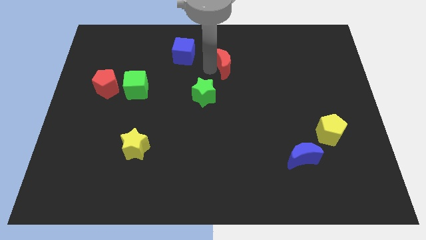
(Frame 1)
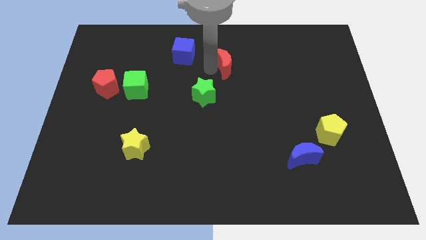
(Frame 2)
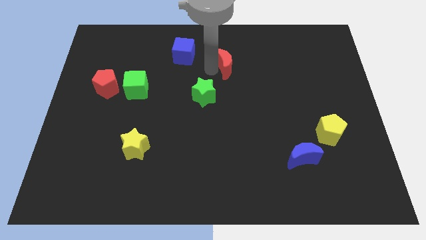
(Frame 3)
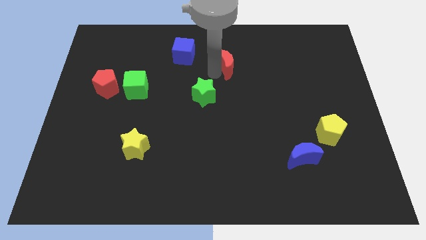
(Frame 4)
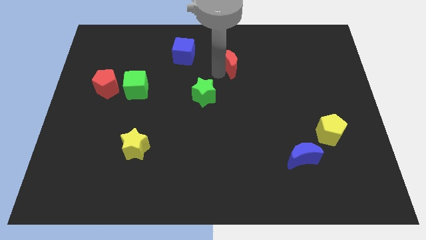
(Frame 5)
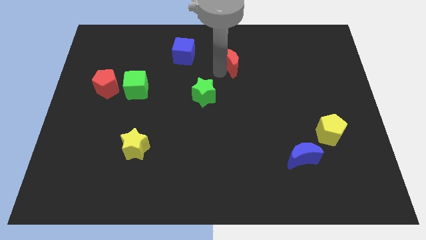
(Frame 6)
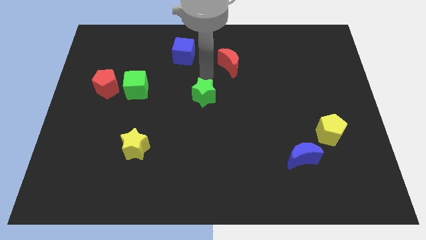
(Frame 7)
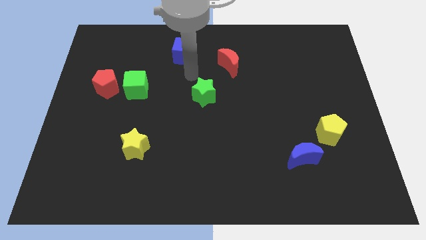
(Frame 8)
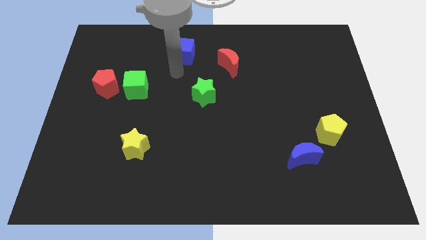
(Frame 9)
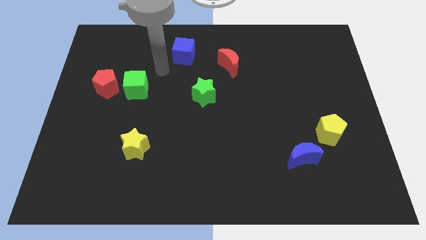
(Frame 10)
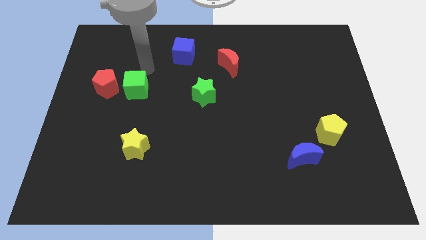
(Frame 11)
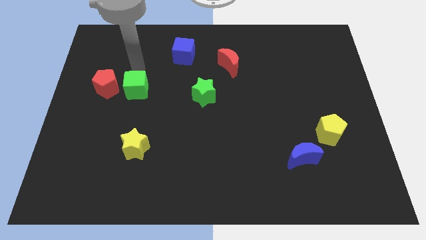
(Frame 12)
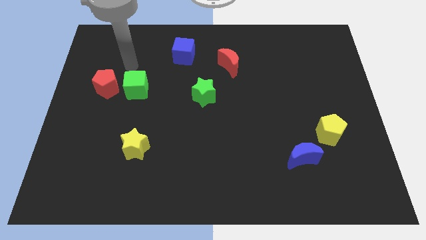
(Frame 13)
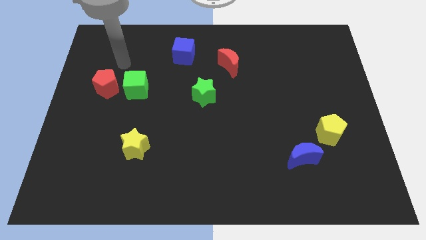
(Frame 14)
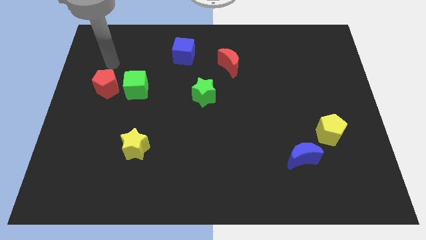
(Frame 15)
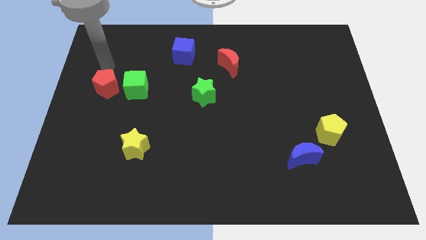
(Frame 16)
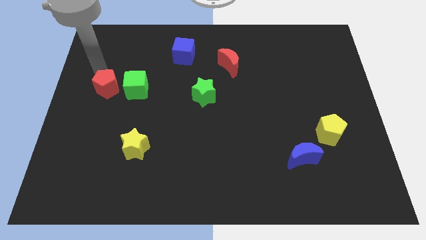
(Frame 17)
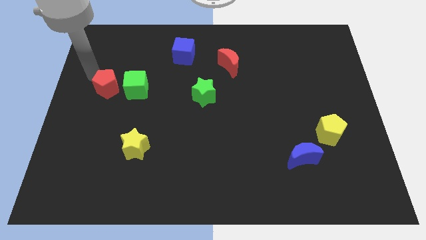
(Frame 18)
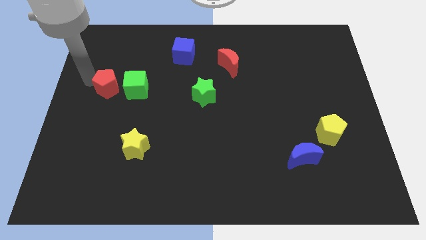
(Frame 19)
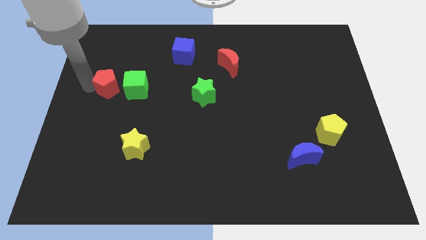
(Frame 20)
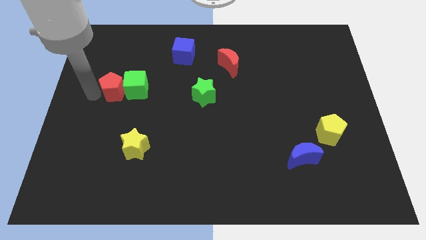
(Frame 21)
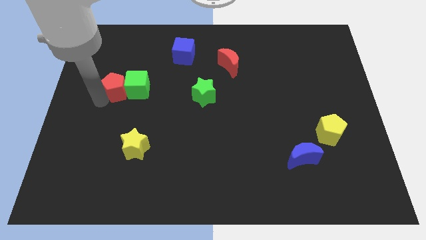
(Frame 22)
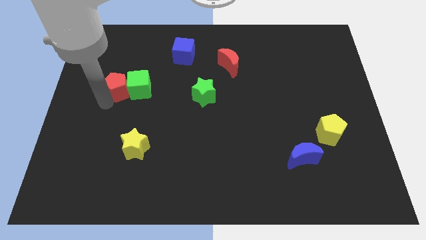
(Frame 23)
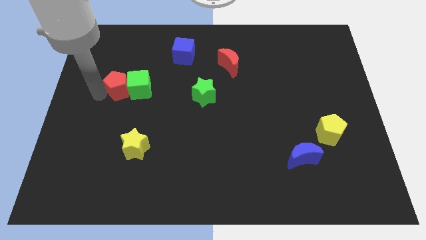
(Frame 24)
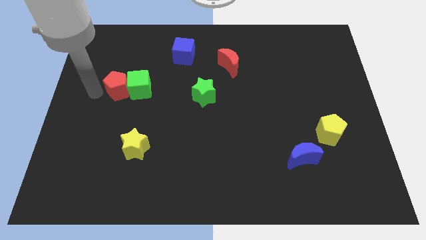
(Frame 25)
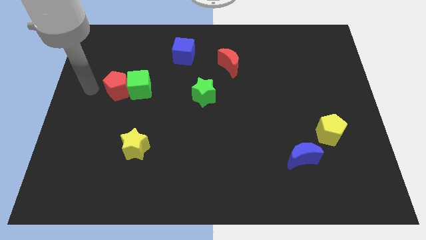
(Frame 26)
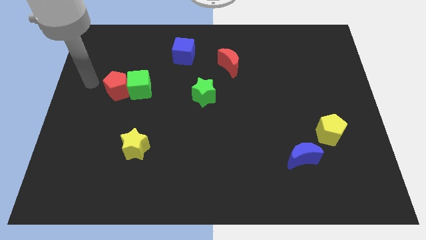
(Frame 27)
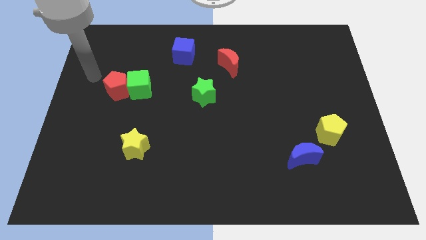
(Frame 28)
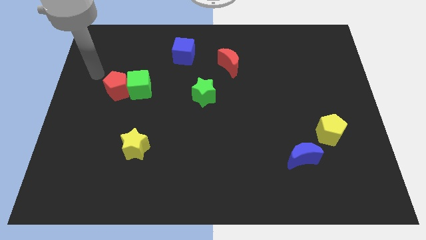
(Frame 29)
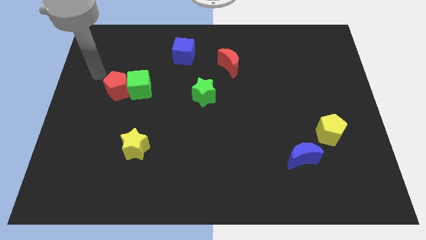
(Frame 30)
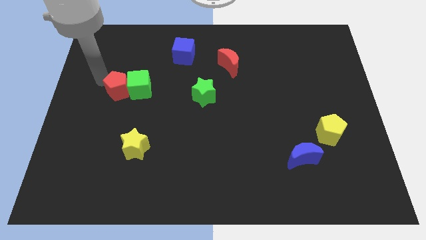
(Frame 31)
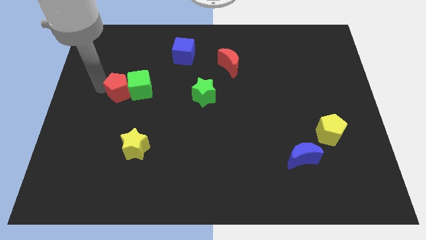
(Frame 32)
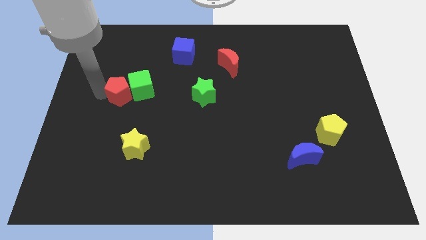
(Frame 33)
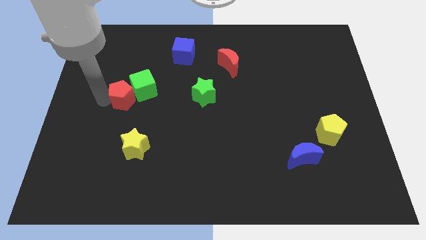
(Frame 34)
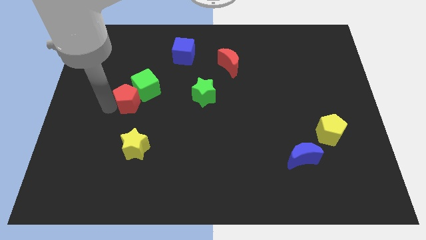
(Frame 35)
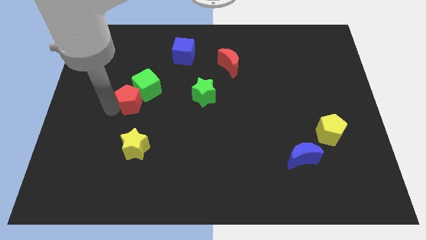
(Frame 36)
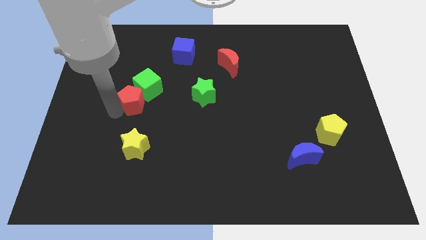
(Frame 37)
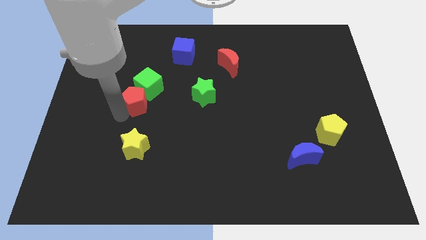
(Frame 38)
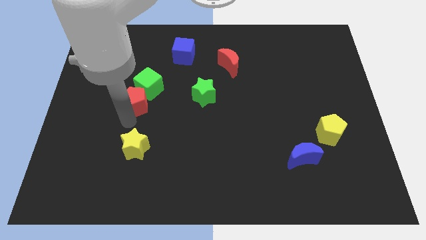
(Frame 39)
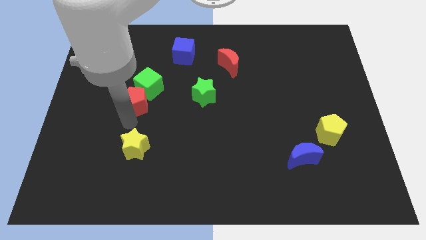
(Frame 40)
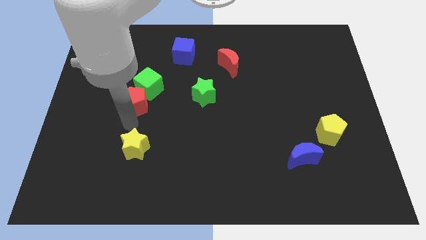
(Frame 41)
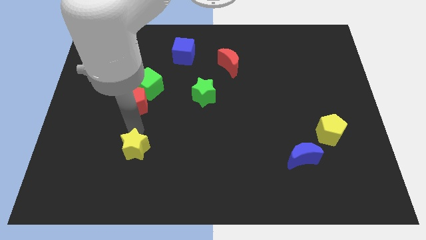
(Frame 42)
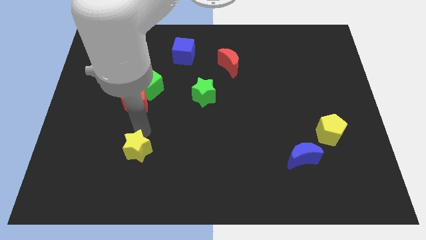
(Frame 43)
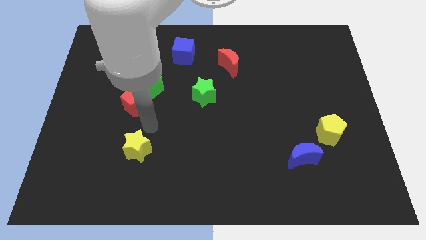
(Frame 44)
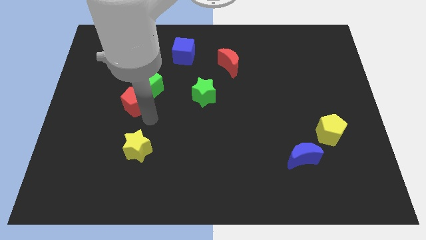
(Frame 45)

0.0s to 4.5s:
move the red pentagon close to the green cube

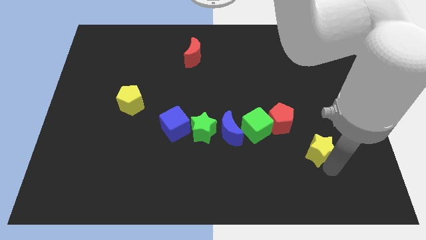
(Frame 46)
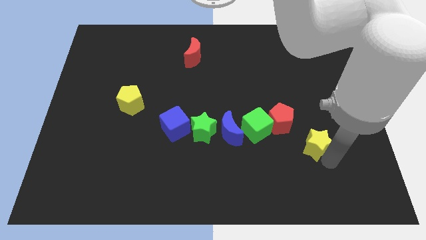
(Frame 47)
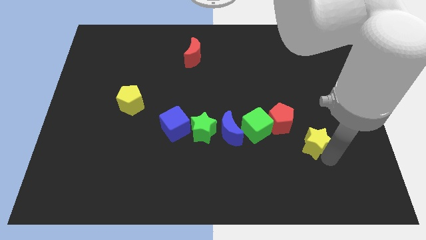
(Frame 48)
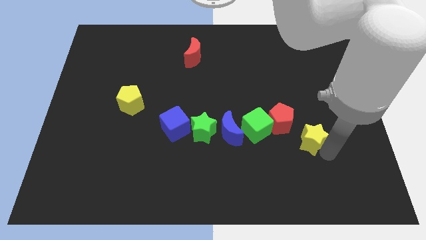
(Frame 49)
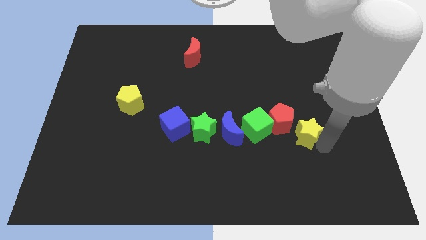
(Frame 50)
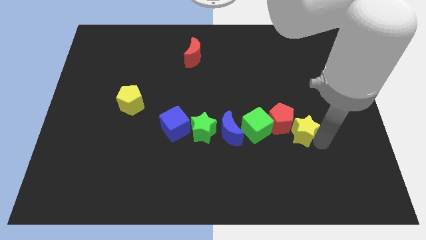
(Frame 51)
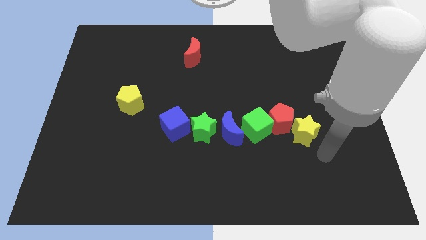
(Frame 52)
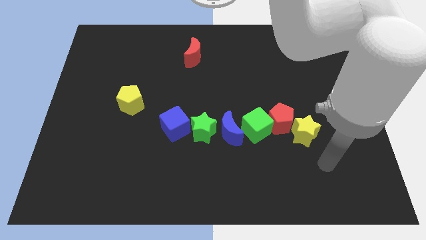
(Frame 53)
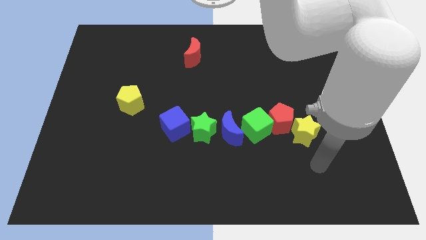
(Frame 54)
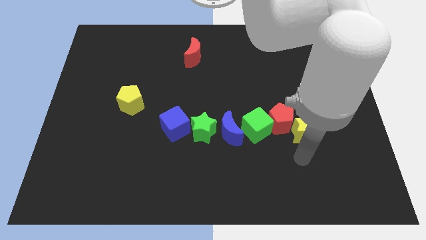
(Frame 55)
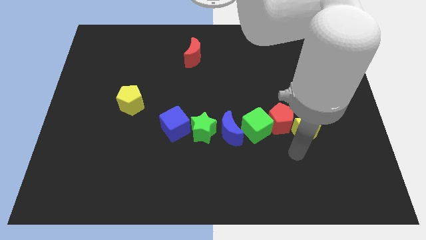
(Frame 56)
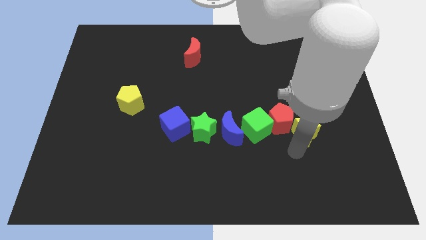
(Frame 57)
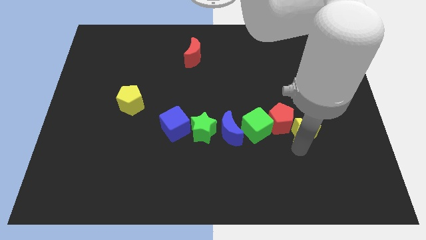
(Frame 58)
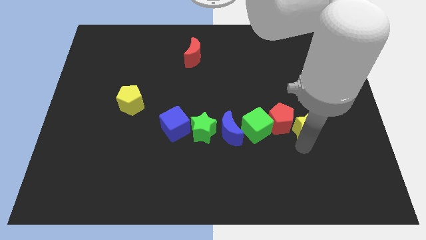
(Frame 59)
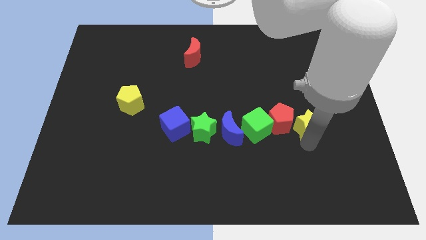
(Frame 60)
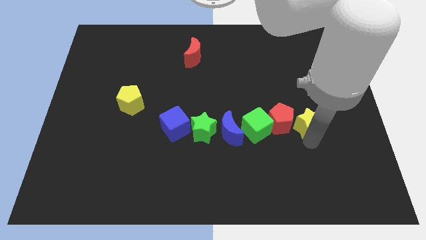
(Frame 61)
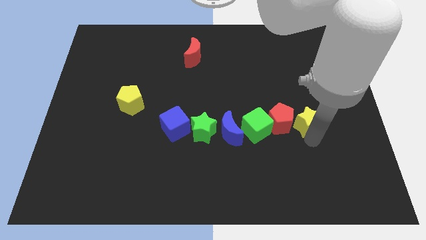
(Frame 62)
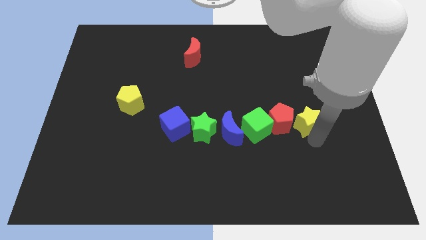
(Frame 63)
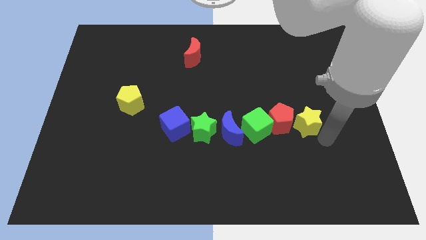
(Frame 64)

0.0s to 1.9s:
move the bottom right star to the center line

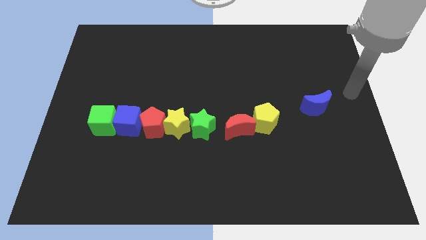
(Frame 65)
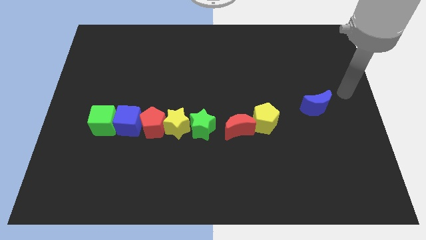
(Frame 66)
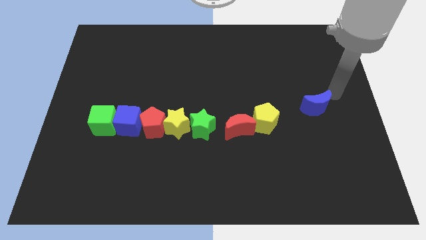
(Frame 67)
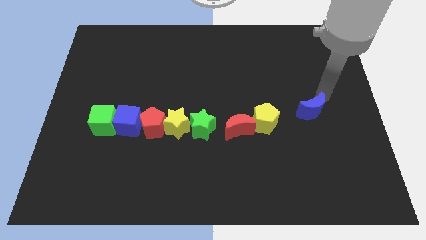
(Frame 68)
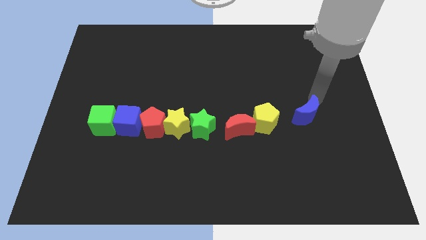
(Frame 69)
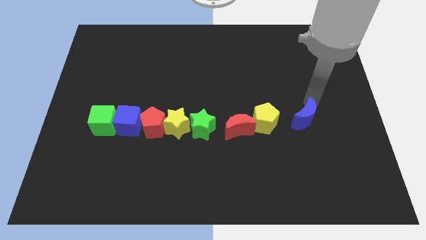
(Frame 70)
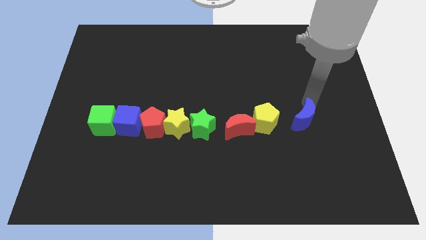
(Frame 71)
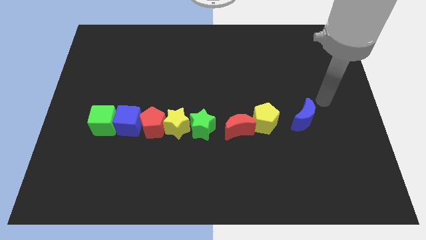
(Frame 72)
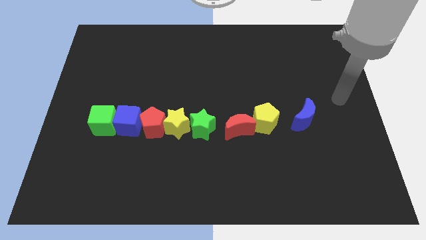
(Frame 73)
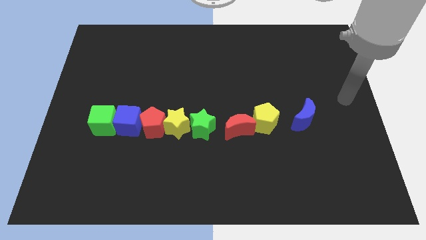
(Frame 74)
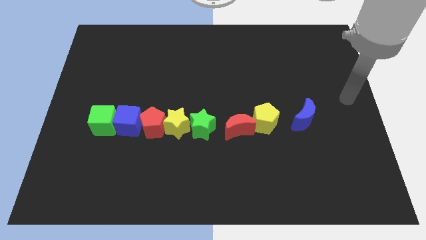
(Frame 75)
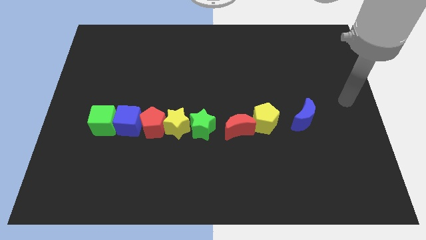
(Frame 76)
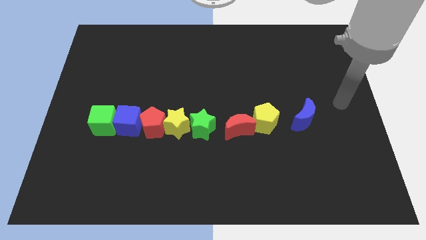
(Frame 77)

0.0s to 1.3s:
push the blue crescent to the right of the yellow pentagon

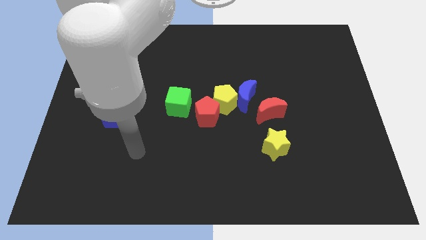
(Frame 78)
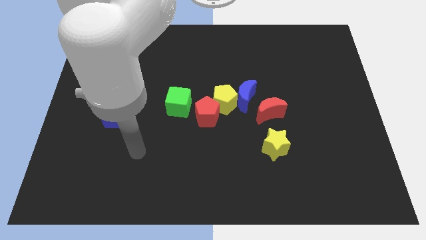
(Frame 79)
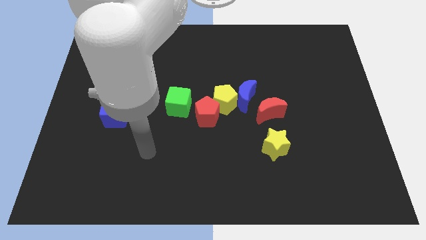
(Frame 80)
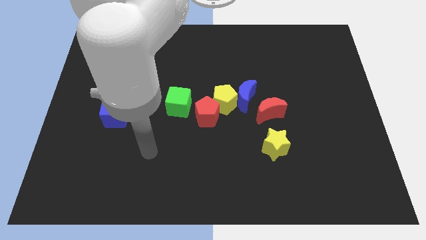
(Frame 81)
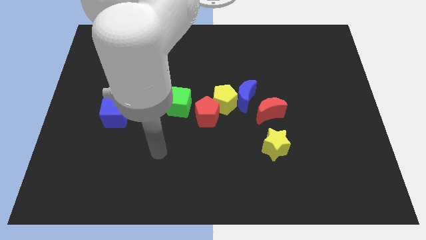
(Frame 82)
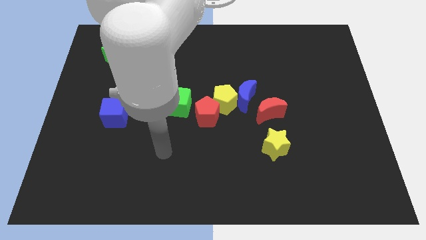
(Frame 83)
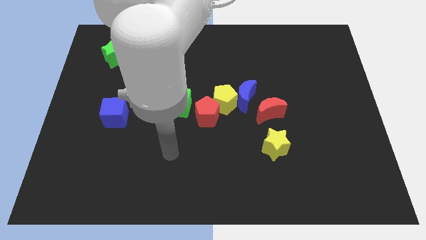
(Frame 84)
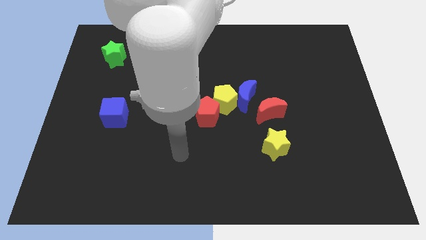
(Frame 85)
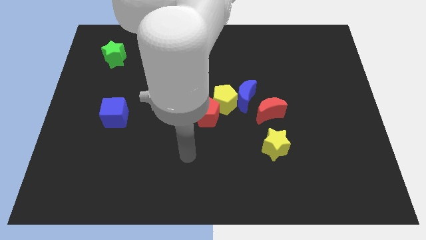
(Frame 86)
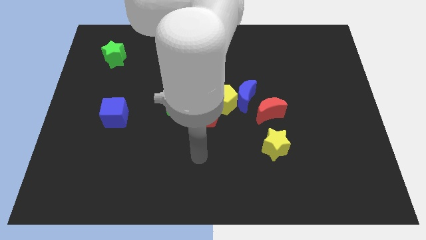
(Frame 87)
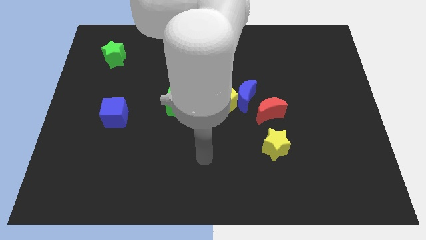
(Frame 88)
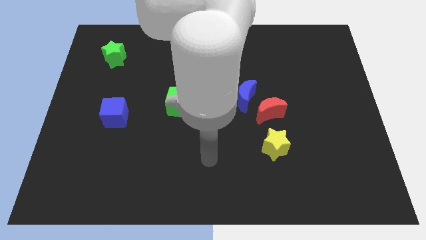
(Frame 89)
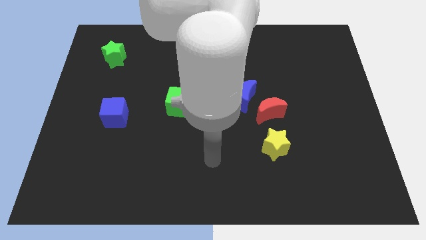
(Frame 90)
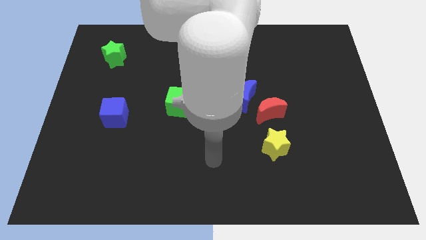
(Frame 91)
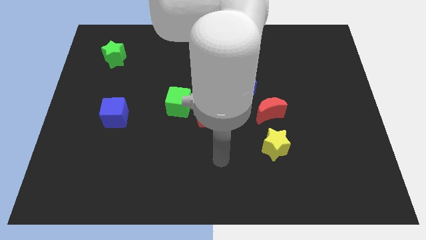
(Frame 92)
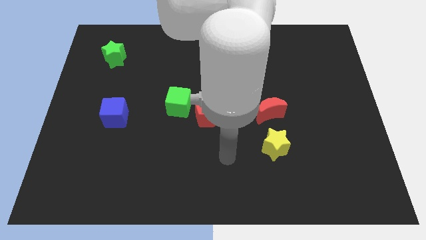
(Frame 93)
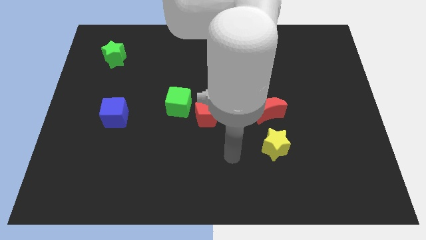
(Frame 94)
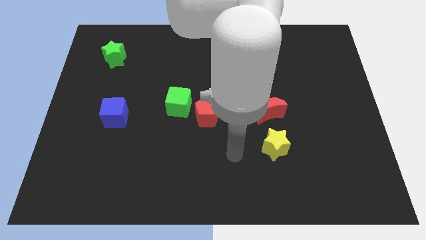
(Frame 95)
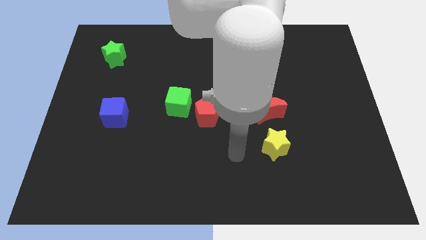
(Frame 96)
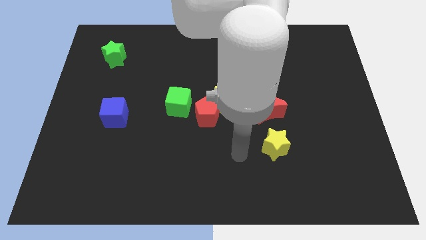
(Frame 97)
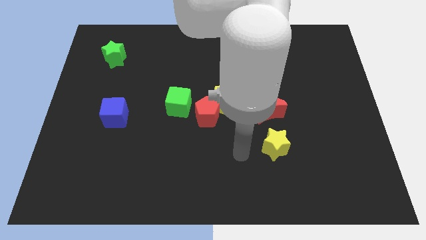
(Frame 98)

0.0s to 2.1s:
move yourself towards the left side of the yellow star
